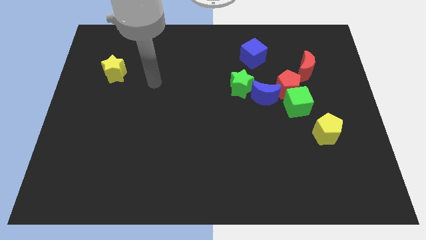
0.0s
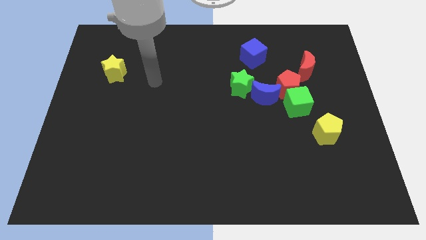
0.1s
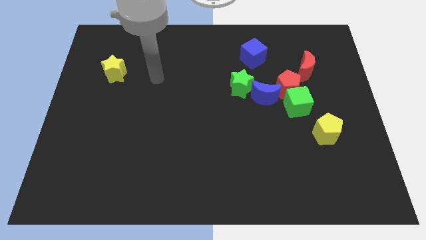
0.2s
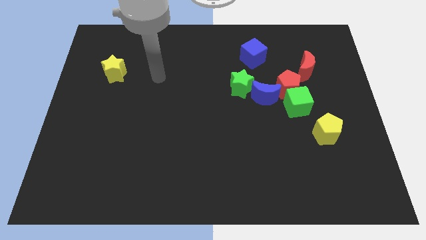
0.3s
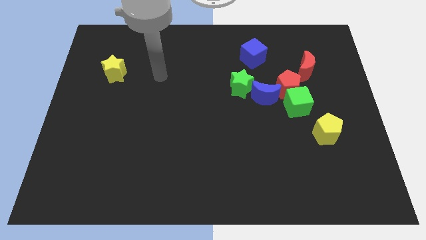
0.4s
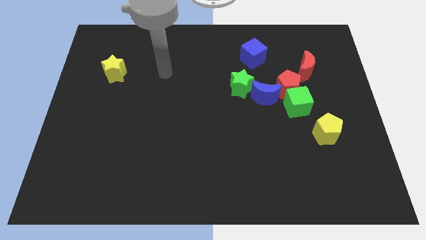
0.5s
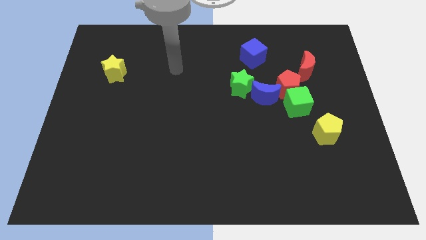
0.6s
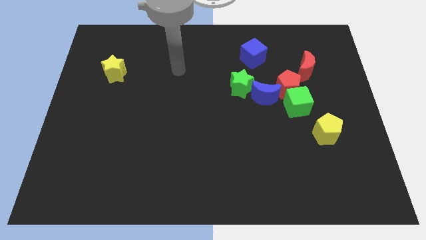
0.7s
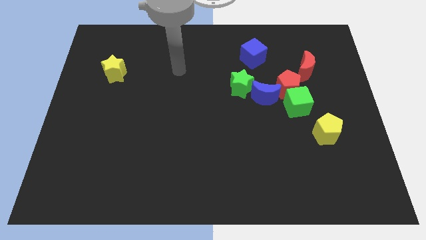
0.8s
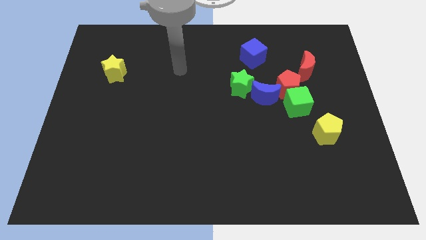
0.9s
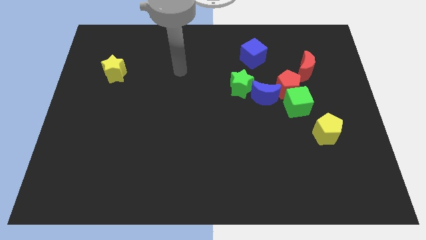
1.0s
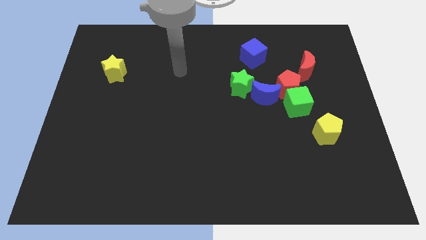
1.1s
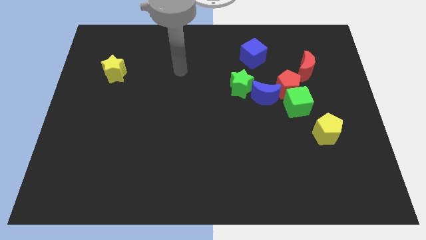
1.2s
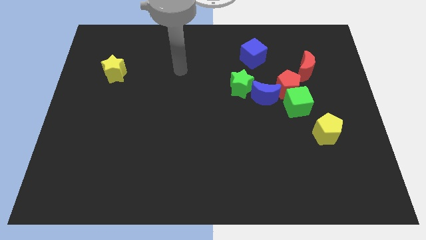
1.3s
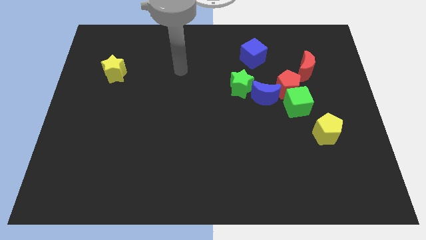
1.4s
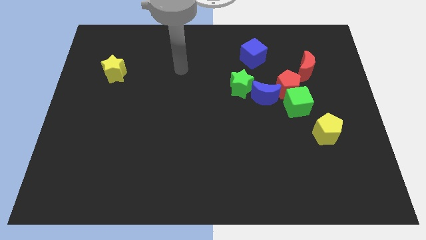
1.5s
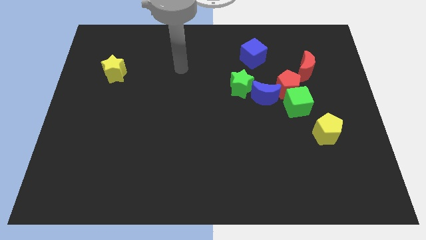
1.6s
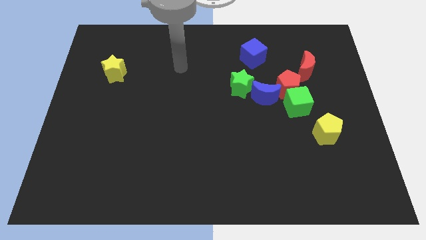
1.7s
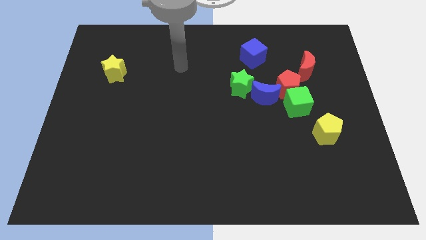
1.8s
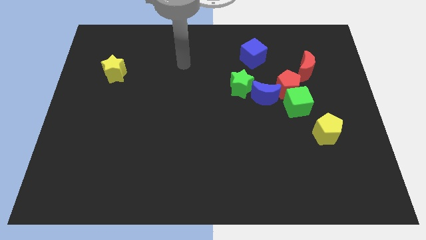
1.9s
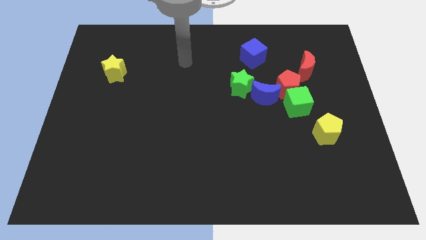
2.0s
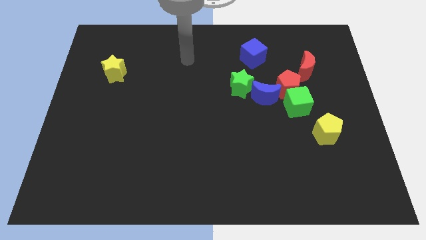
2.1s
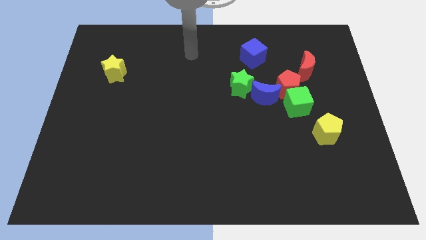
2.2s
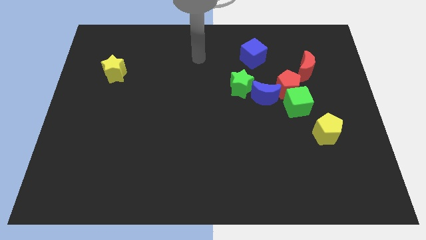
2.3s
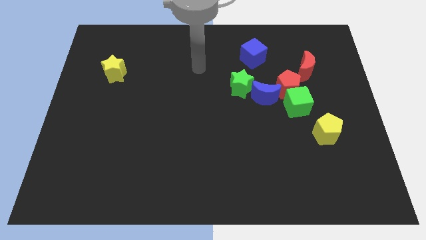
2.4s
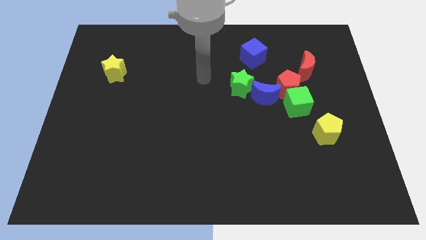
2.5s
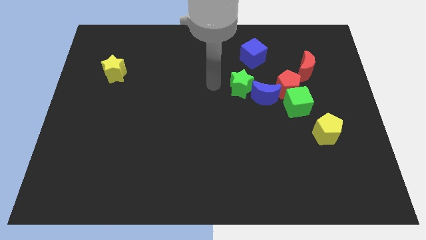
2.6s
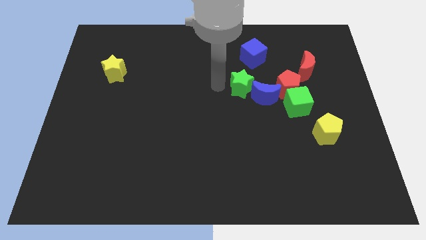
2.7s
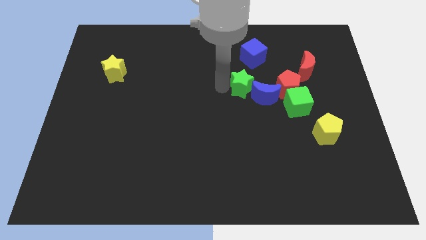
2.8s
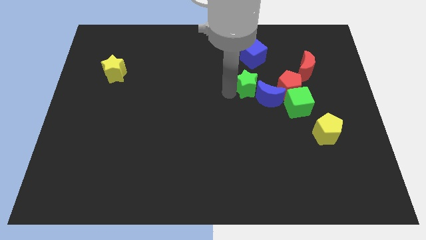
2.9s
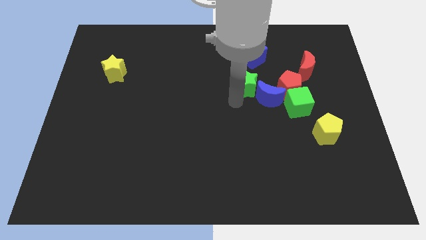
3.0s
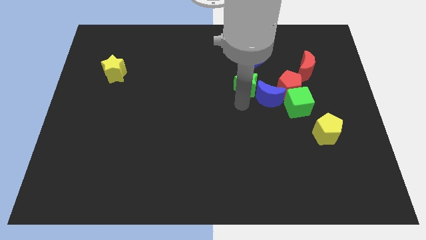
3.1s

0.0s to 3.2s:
move the green star into the blue moon

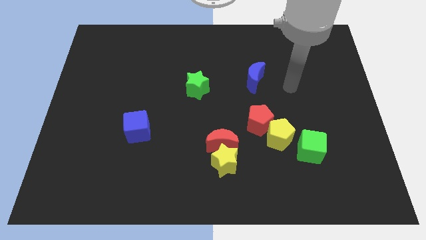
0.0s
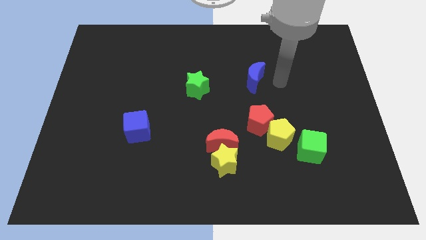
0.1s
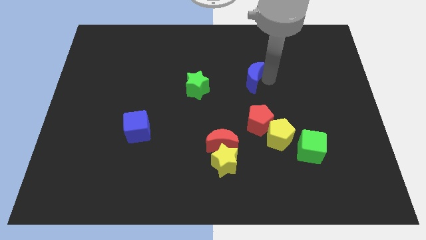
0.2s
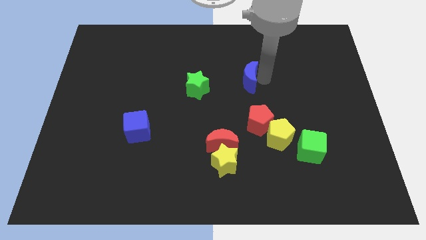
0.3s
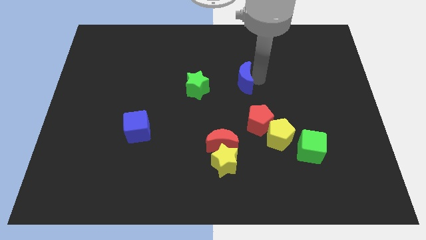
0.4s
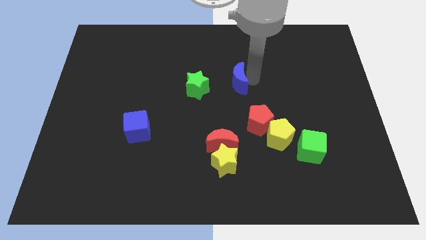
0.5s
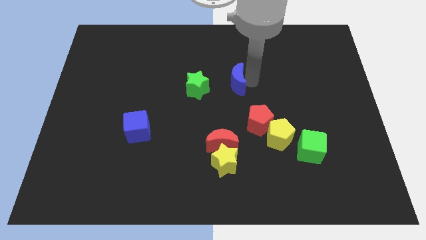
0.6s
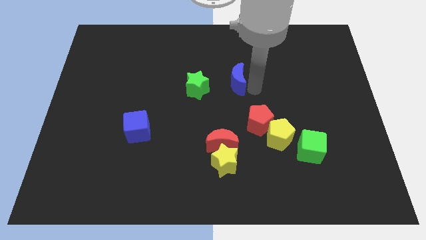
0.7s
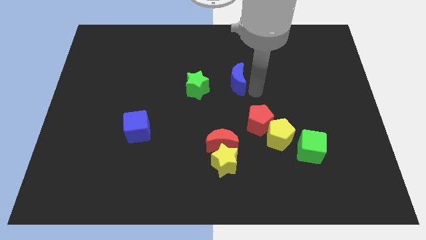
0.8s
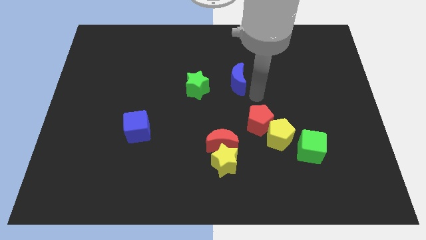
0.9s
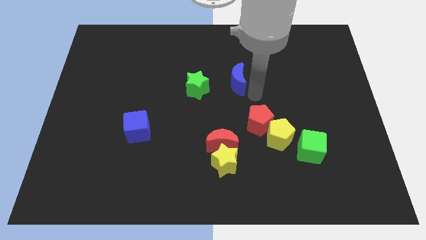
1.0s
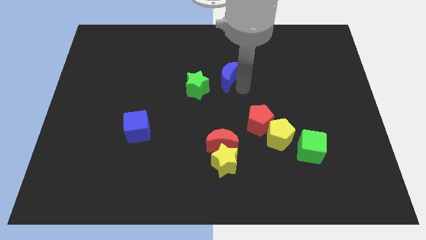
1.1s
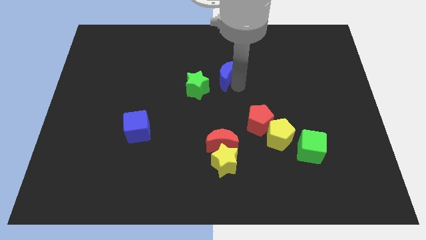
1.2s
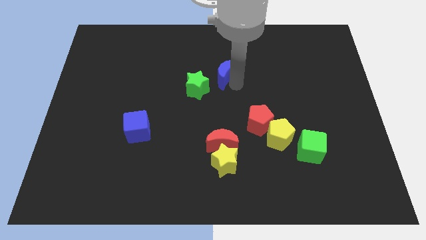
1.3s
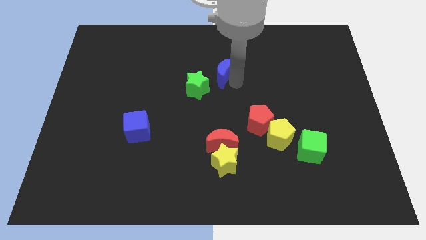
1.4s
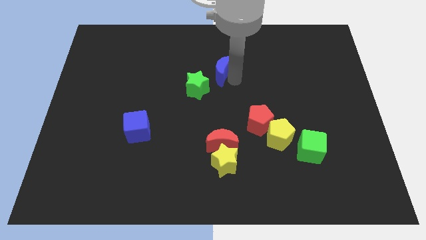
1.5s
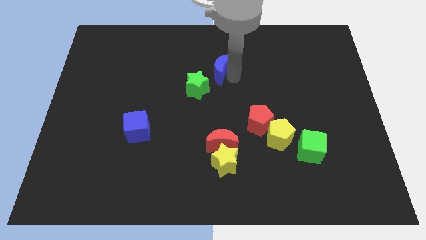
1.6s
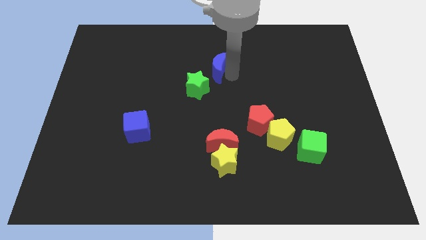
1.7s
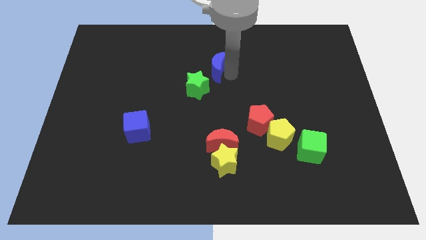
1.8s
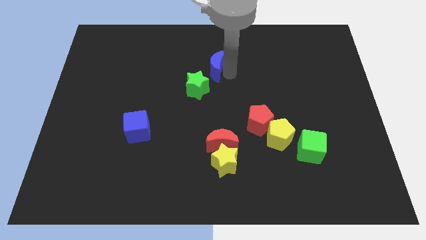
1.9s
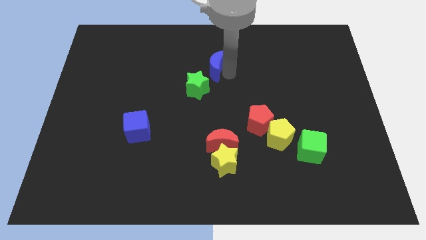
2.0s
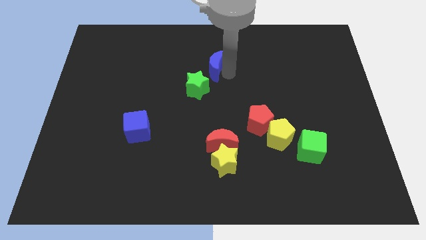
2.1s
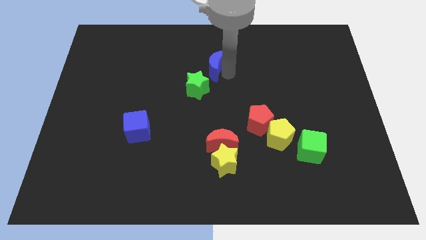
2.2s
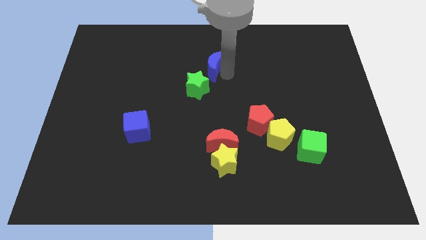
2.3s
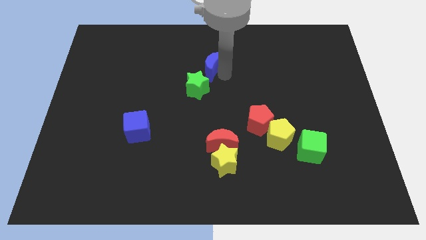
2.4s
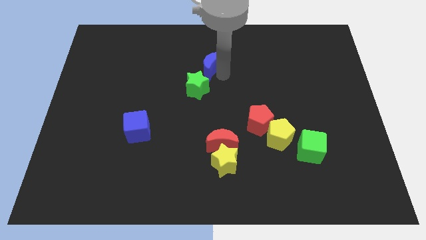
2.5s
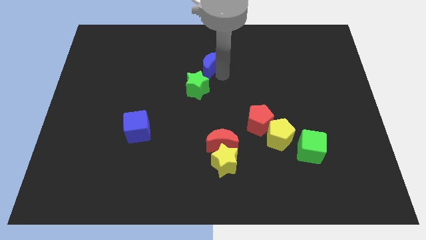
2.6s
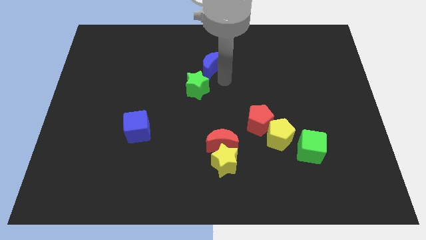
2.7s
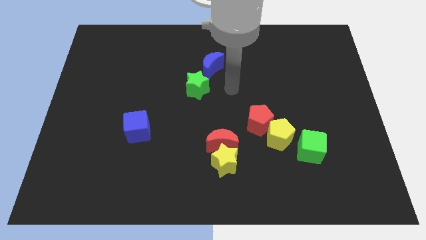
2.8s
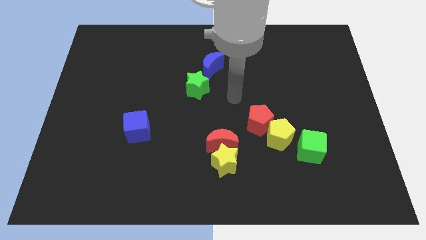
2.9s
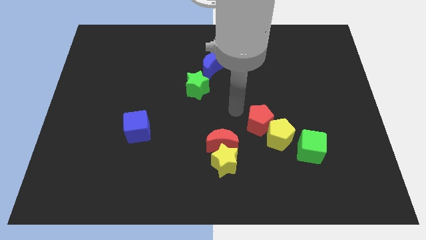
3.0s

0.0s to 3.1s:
slide the blue moon to the top side of the green star

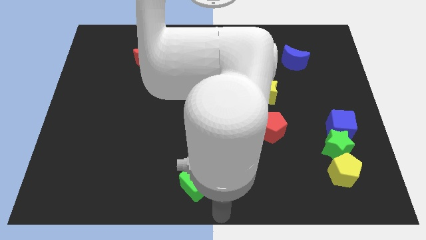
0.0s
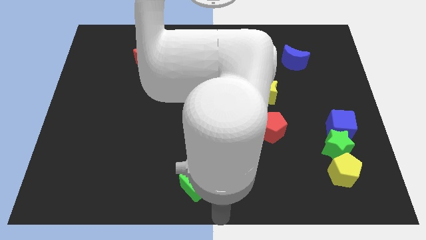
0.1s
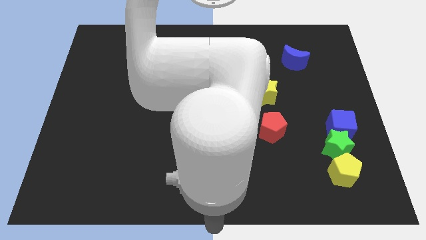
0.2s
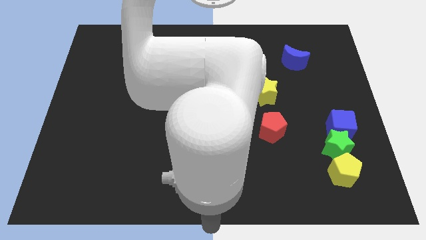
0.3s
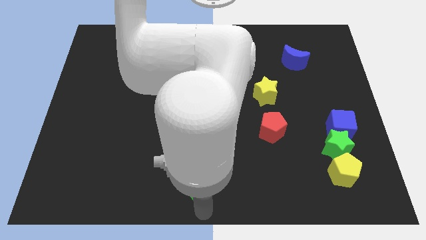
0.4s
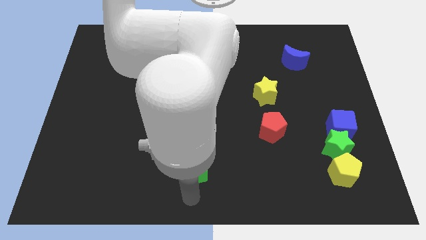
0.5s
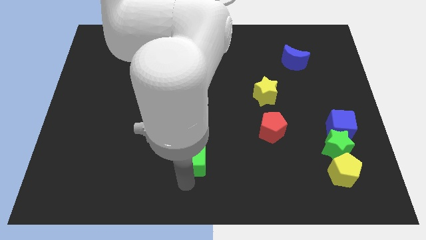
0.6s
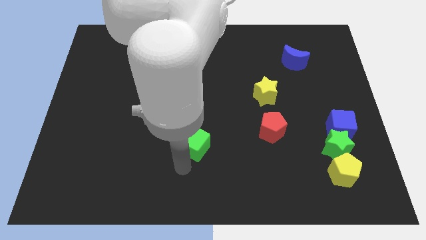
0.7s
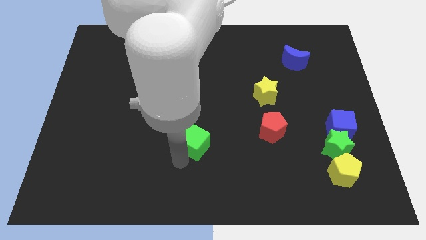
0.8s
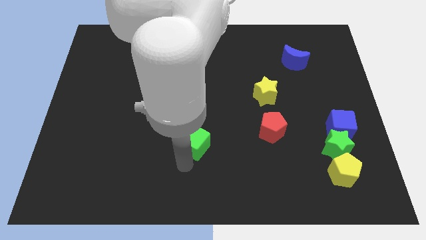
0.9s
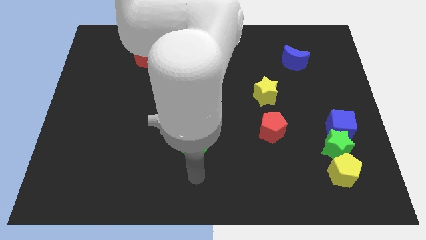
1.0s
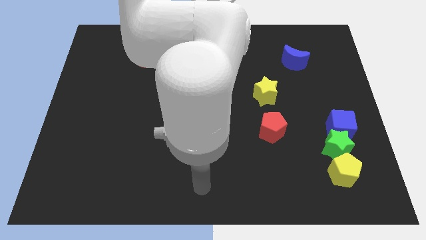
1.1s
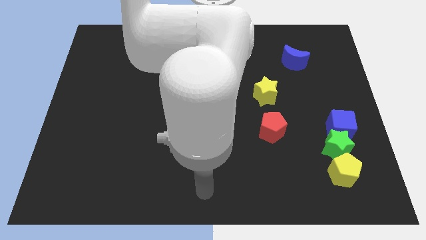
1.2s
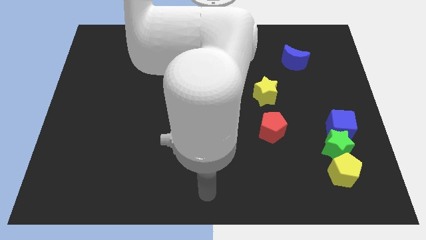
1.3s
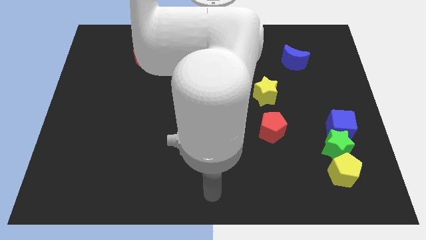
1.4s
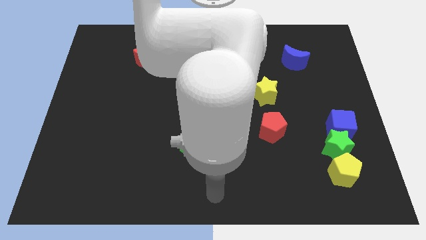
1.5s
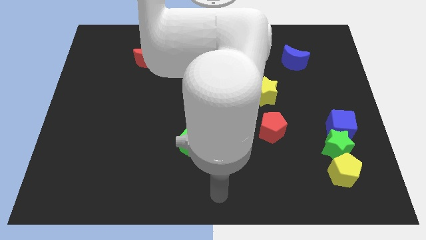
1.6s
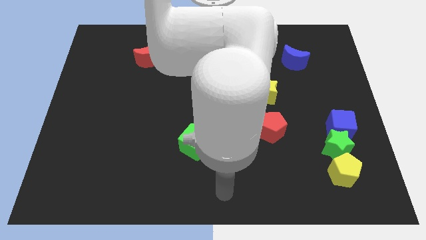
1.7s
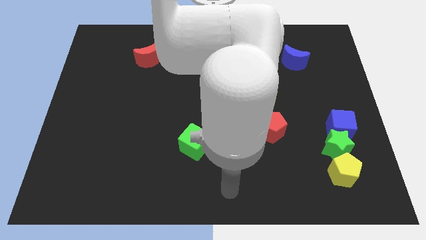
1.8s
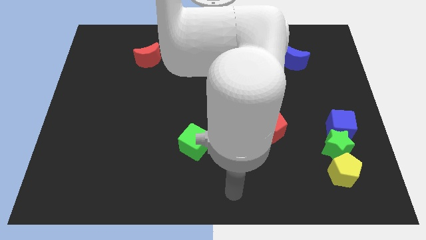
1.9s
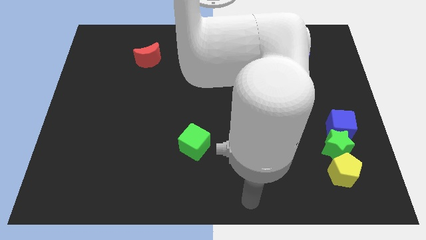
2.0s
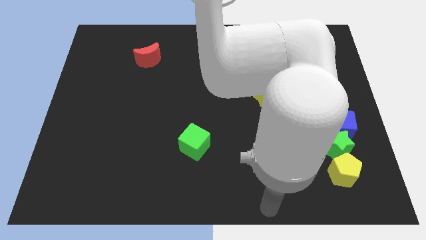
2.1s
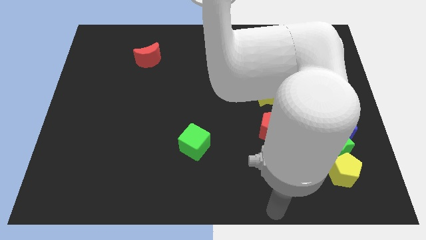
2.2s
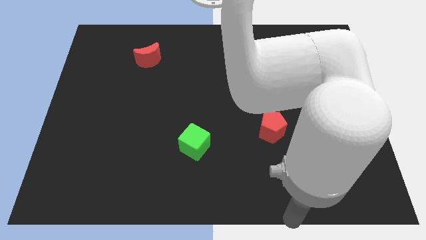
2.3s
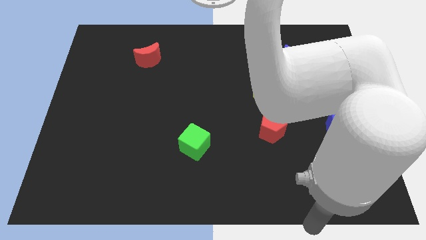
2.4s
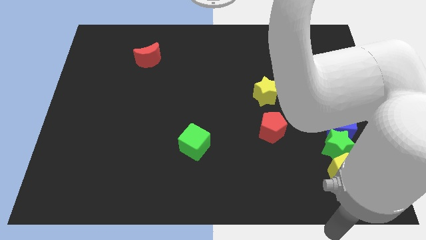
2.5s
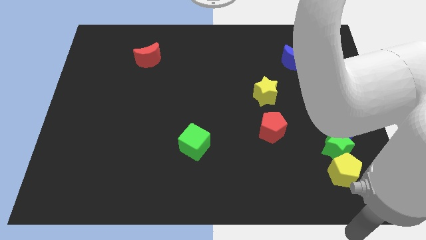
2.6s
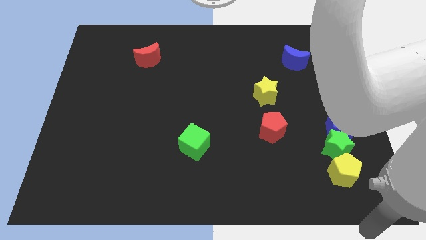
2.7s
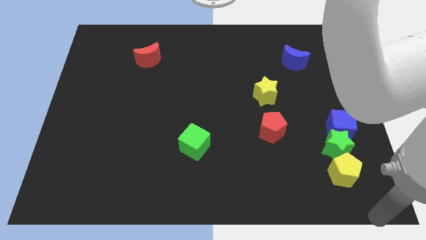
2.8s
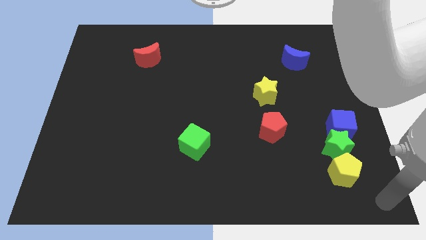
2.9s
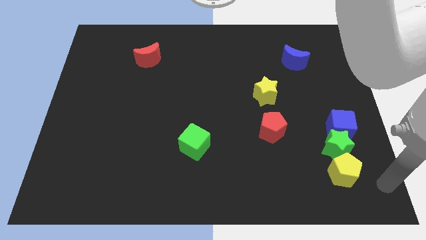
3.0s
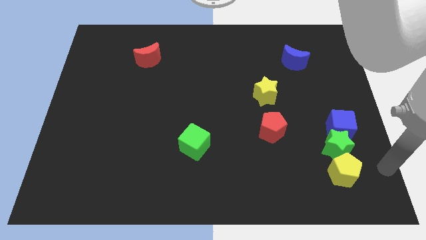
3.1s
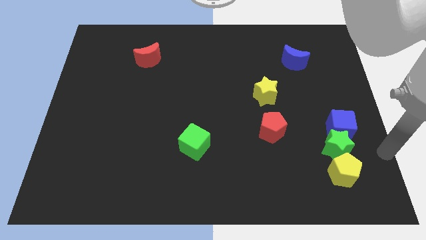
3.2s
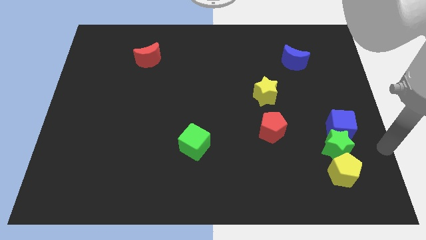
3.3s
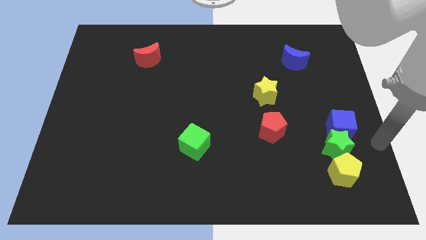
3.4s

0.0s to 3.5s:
move the green cube slightly to the top
